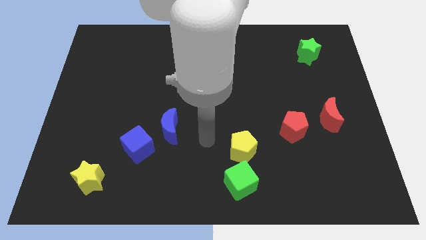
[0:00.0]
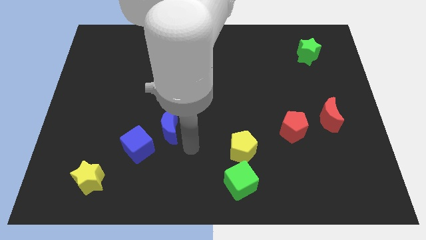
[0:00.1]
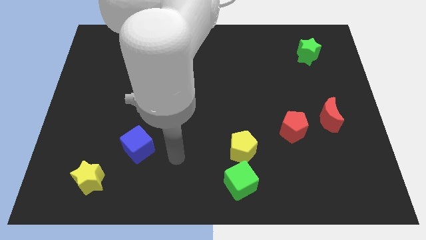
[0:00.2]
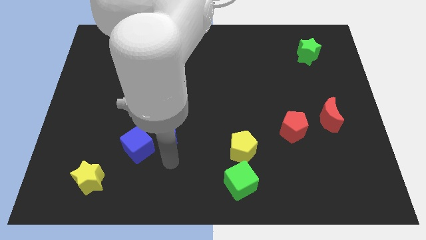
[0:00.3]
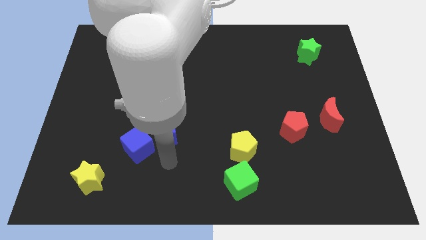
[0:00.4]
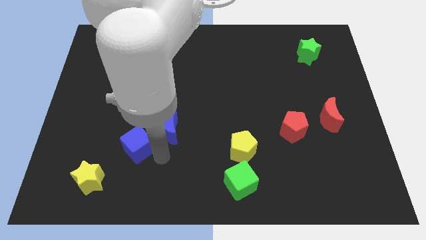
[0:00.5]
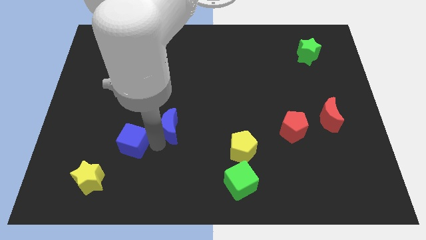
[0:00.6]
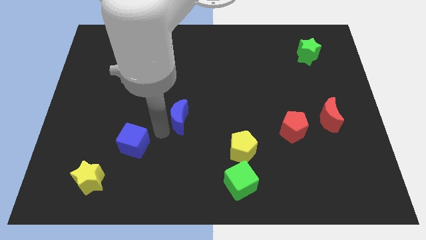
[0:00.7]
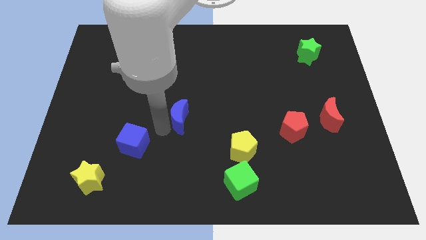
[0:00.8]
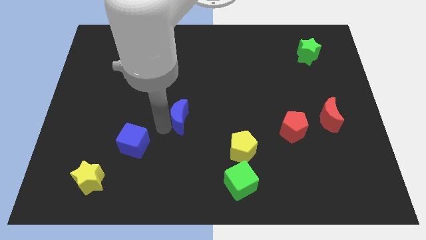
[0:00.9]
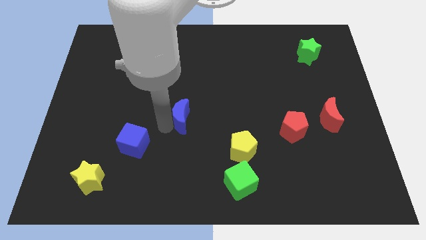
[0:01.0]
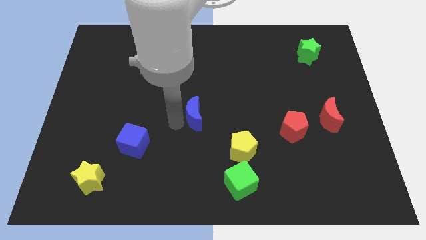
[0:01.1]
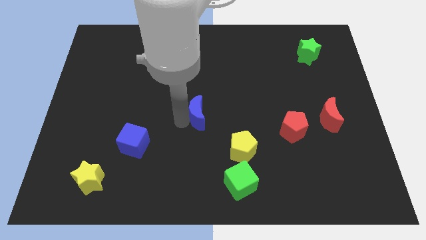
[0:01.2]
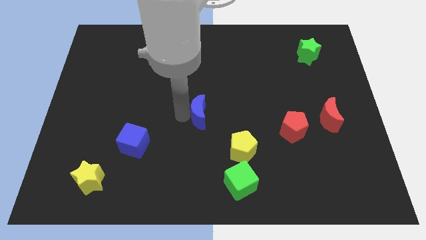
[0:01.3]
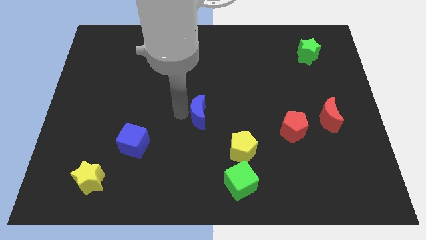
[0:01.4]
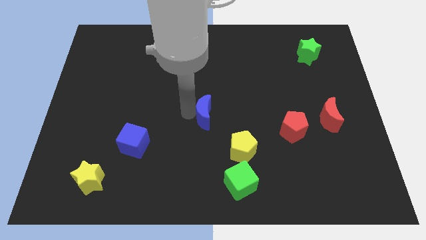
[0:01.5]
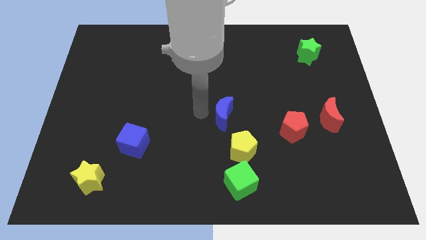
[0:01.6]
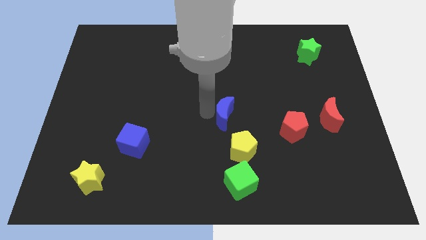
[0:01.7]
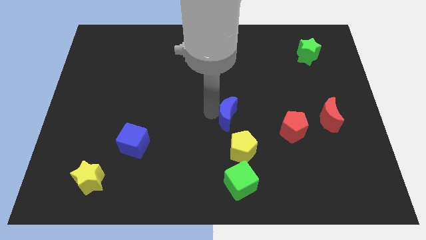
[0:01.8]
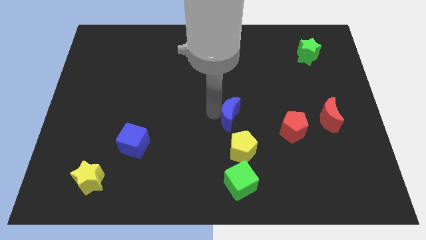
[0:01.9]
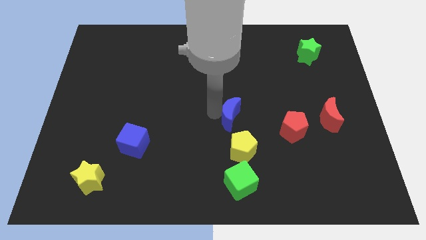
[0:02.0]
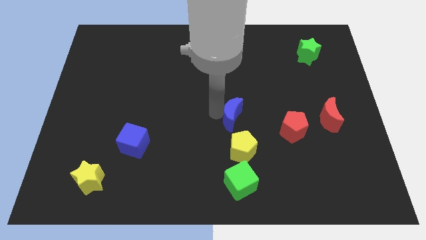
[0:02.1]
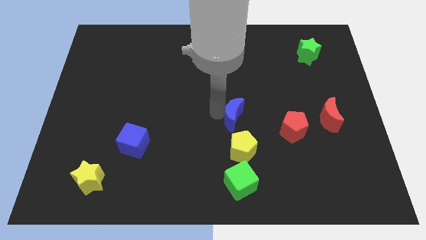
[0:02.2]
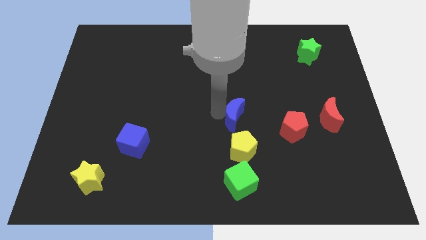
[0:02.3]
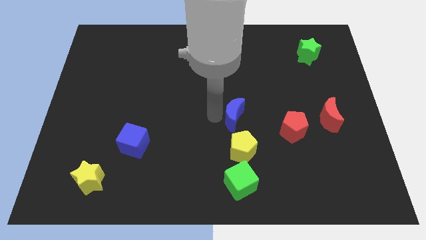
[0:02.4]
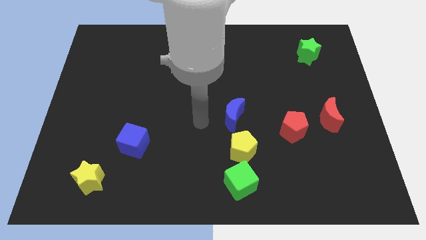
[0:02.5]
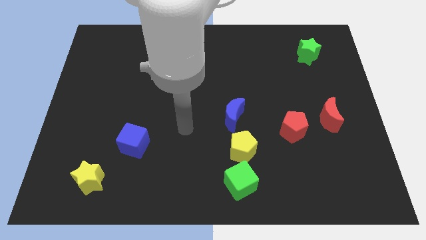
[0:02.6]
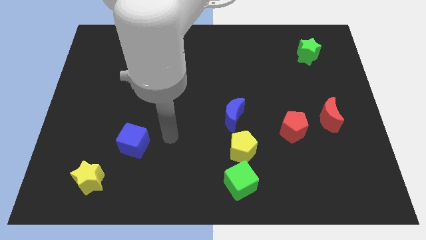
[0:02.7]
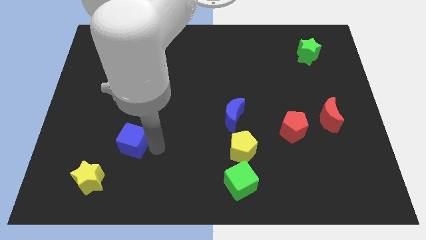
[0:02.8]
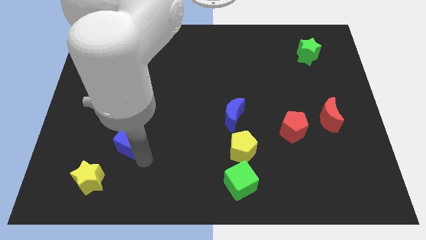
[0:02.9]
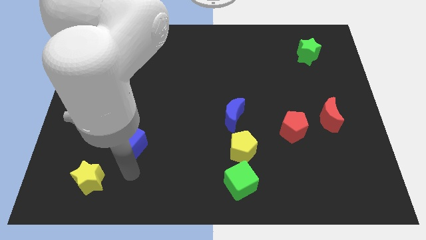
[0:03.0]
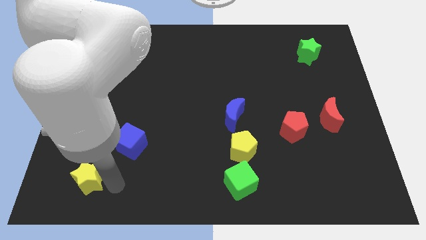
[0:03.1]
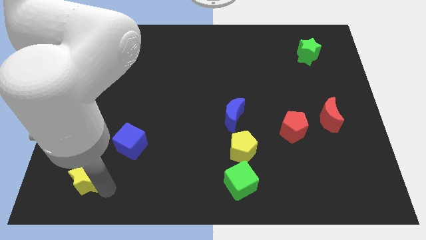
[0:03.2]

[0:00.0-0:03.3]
move the blue crescent to the top of the yellow pentagon

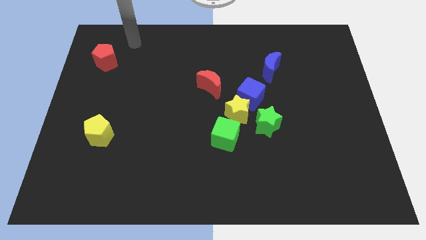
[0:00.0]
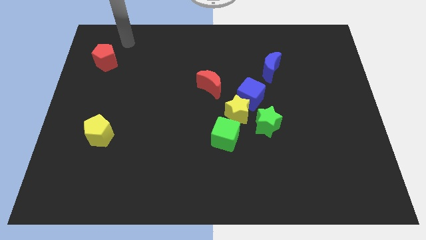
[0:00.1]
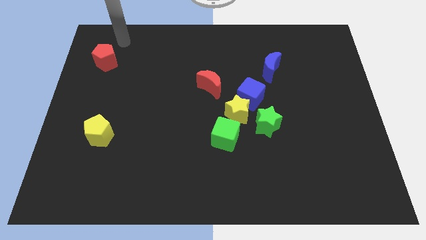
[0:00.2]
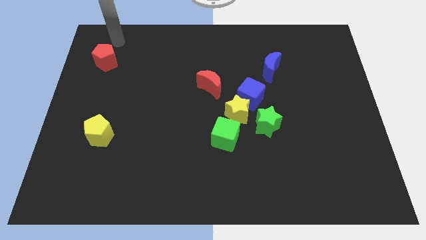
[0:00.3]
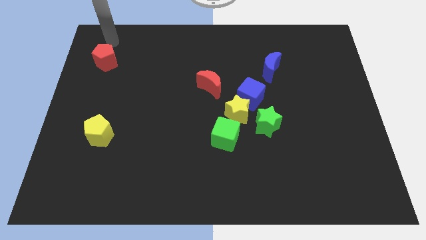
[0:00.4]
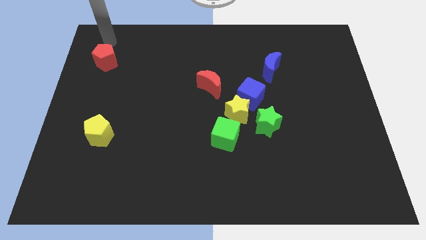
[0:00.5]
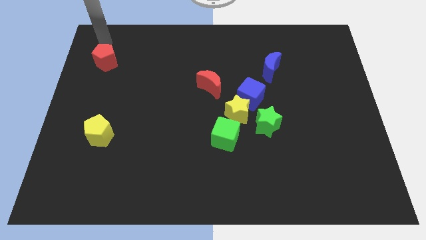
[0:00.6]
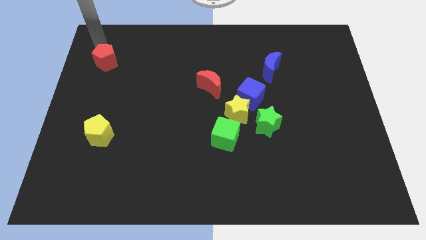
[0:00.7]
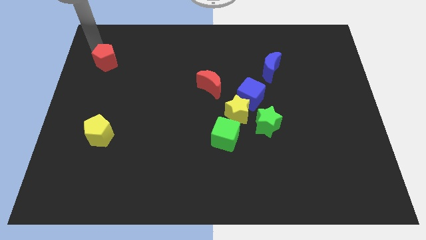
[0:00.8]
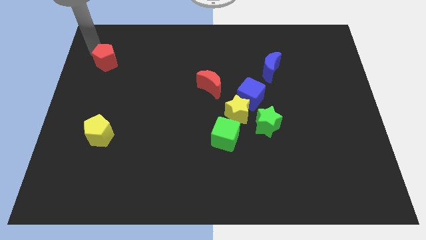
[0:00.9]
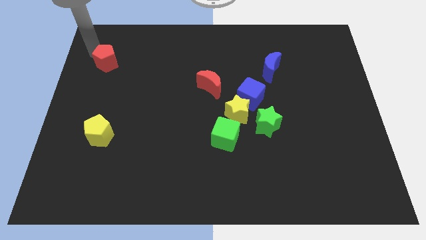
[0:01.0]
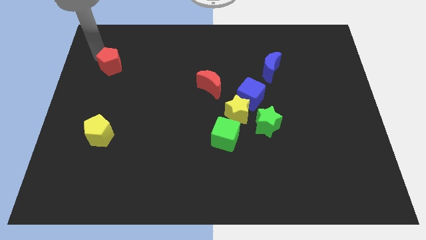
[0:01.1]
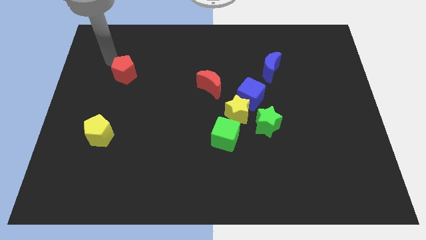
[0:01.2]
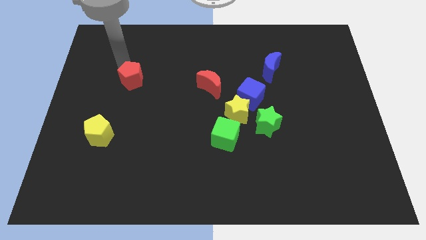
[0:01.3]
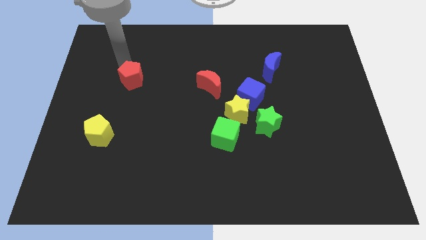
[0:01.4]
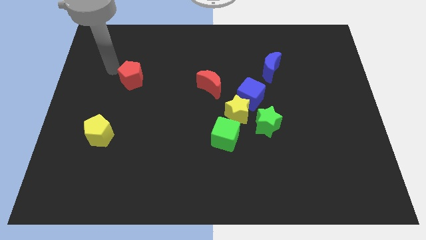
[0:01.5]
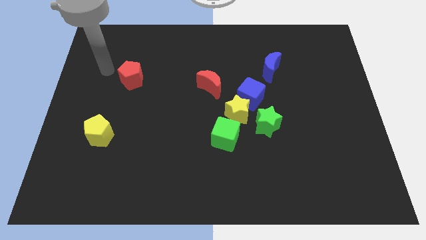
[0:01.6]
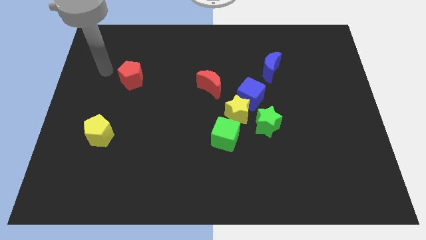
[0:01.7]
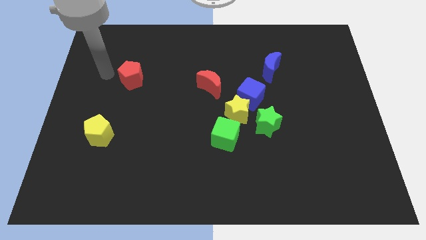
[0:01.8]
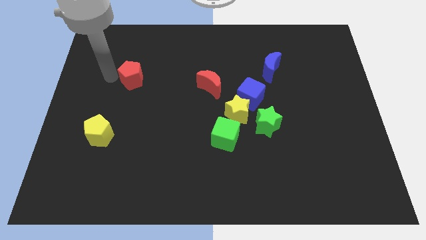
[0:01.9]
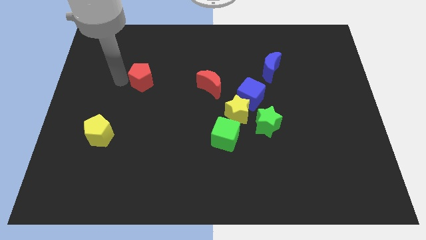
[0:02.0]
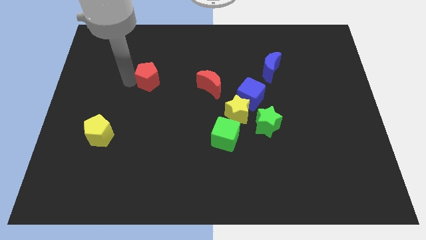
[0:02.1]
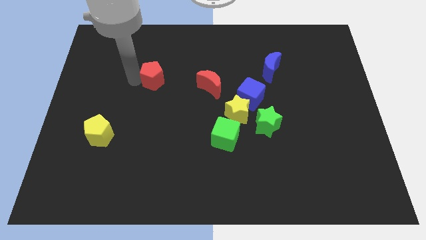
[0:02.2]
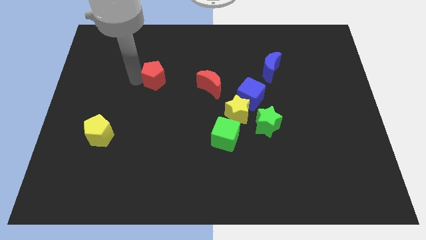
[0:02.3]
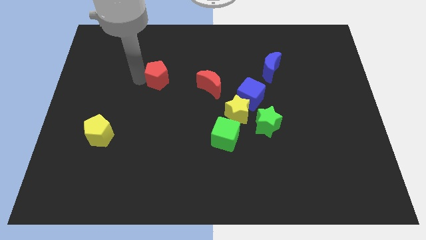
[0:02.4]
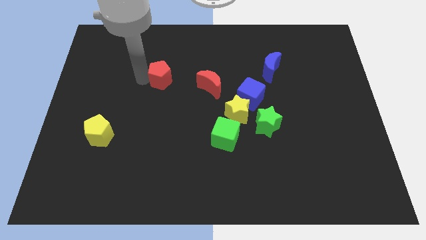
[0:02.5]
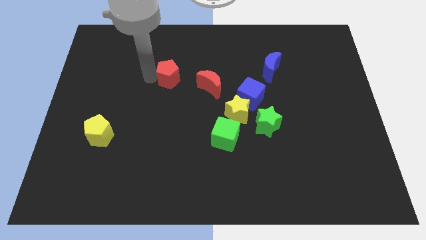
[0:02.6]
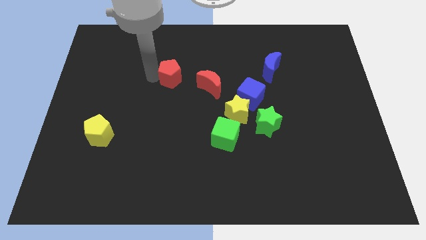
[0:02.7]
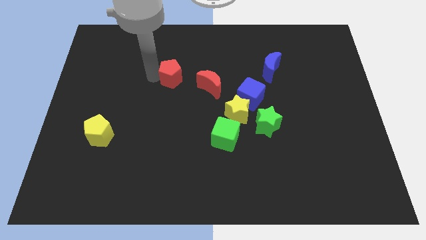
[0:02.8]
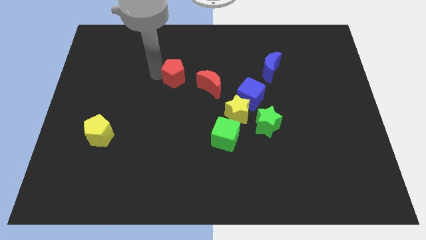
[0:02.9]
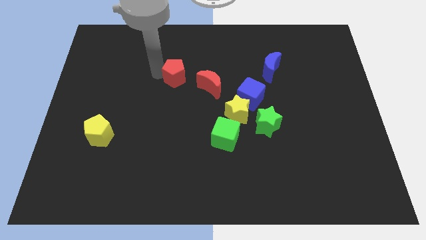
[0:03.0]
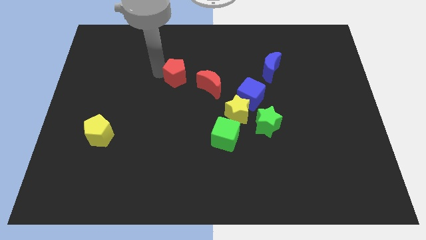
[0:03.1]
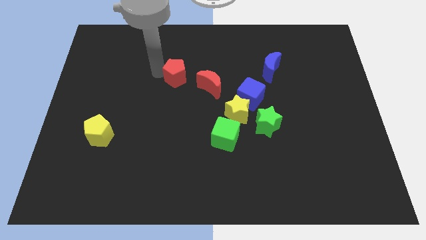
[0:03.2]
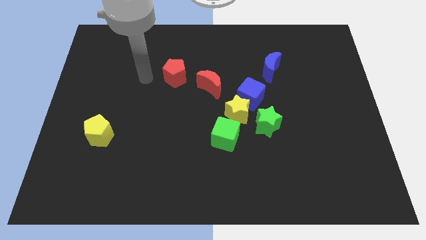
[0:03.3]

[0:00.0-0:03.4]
place the red pentagon towards the top left side of the red crescent

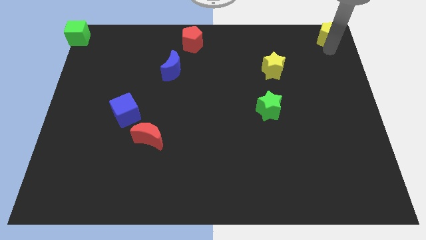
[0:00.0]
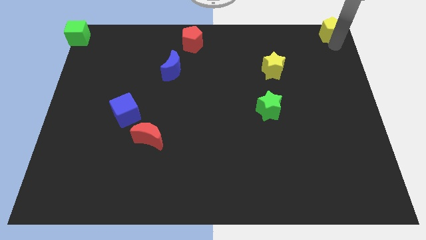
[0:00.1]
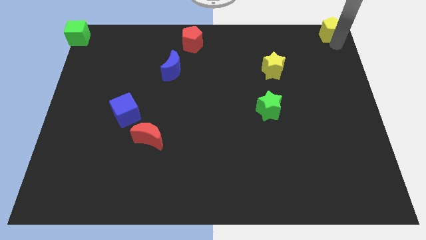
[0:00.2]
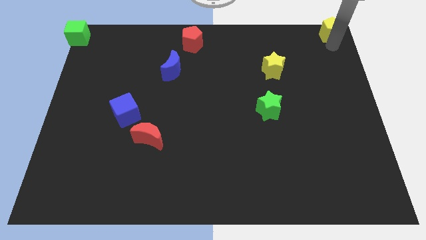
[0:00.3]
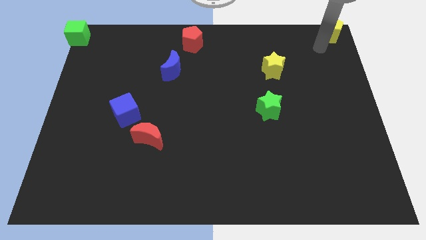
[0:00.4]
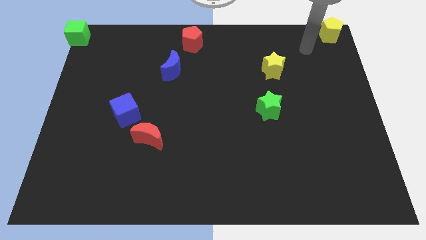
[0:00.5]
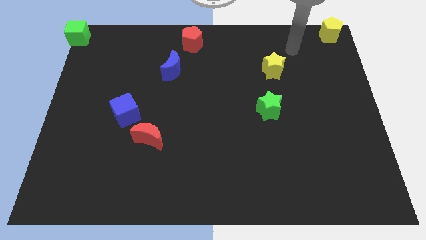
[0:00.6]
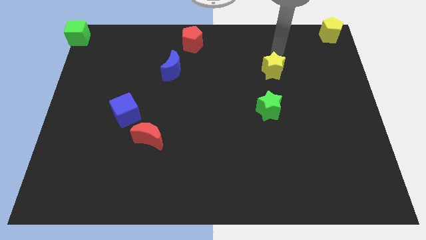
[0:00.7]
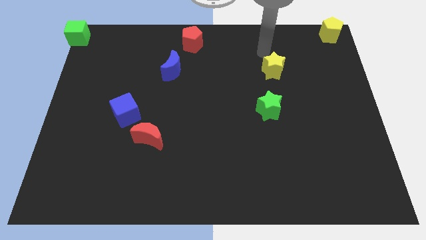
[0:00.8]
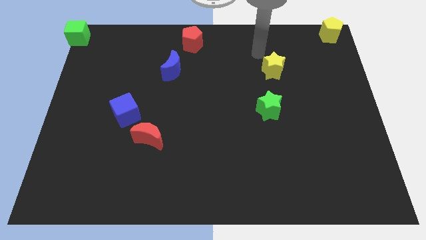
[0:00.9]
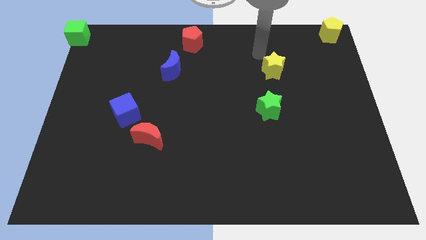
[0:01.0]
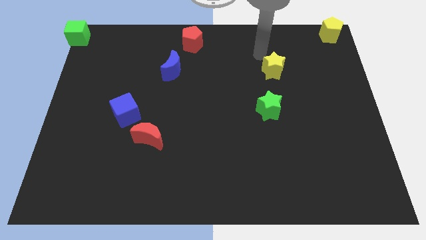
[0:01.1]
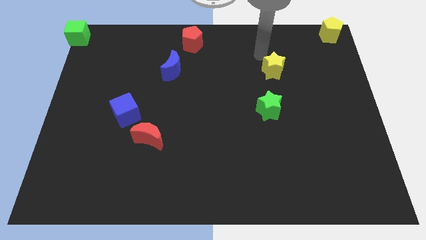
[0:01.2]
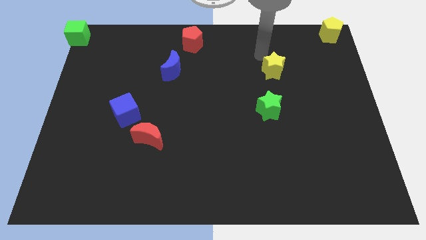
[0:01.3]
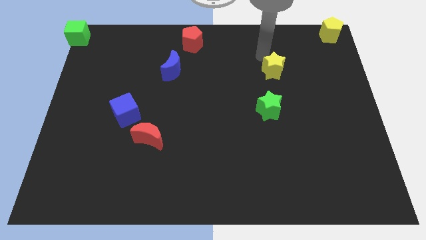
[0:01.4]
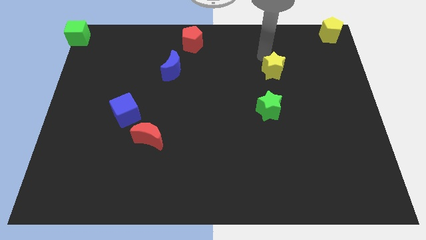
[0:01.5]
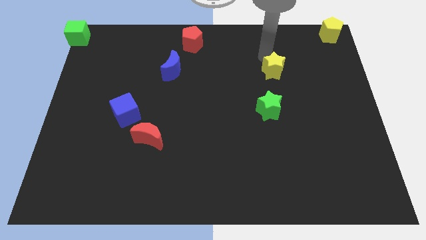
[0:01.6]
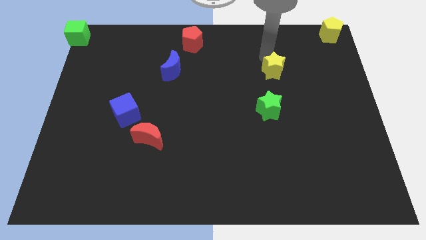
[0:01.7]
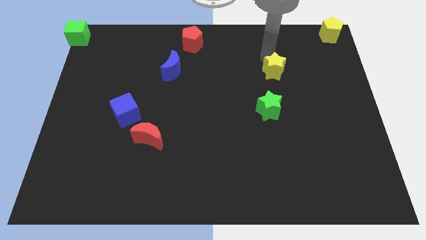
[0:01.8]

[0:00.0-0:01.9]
place your arm above the yellow star

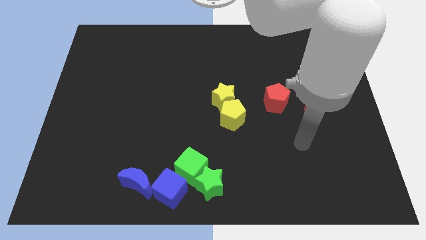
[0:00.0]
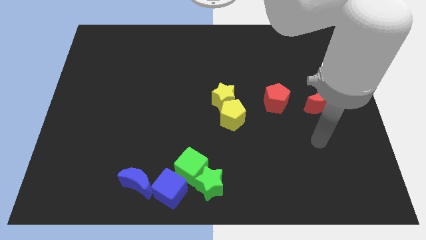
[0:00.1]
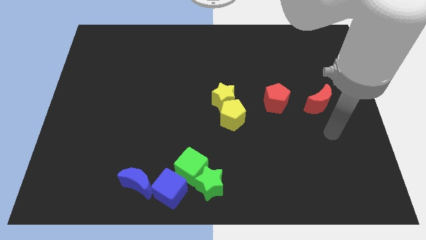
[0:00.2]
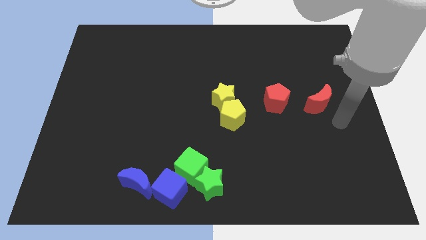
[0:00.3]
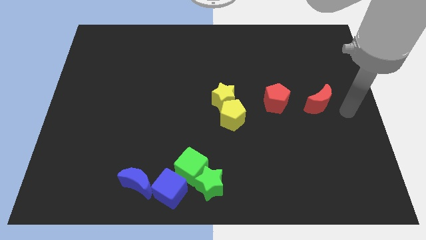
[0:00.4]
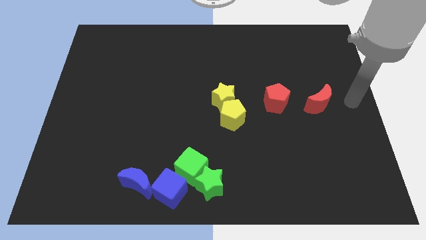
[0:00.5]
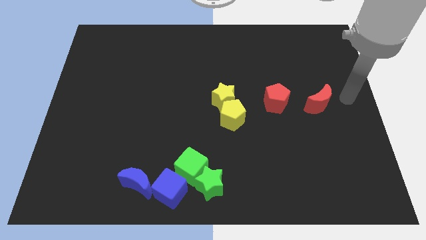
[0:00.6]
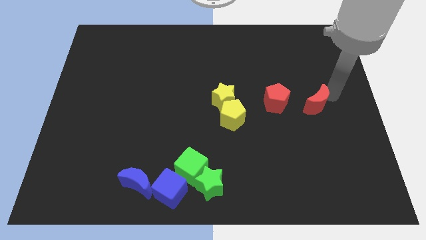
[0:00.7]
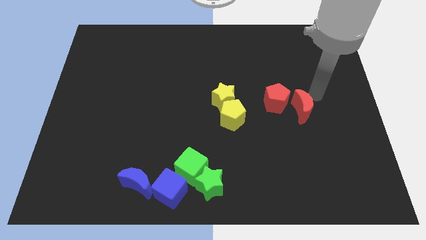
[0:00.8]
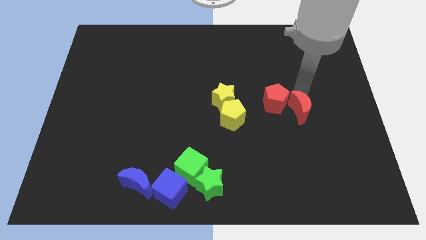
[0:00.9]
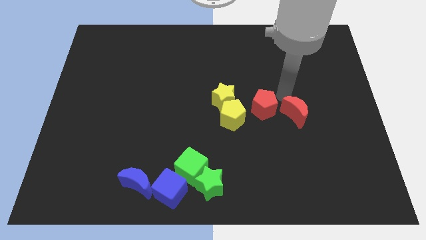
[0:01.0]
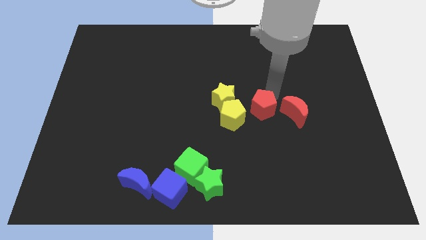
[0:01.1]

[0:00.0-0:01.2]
move the red crescent slightly towards the red pentagon
